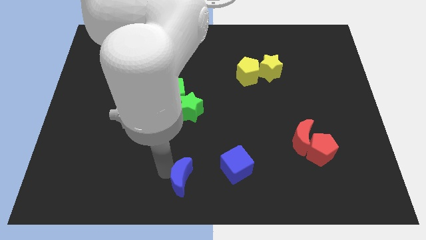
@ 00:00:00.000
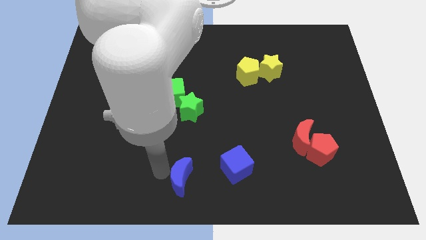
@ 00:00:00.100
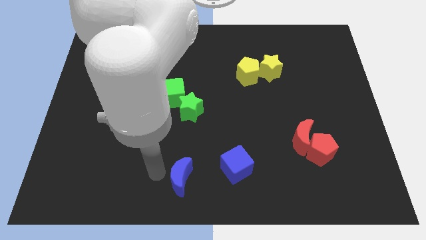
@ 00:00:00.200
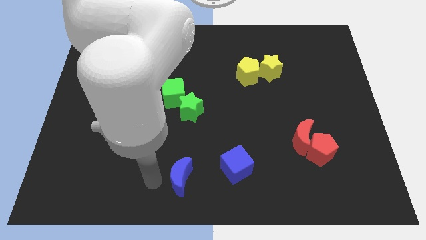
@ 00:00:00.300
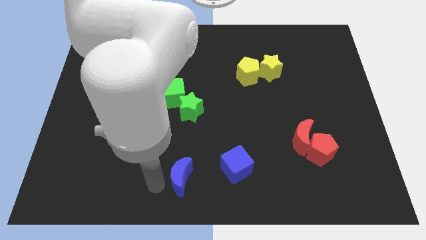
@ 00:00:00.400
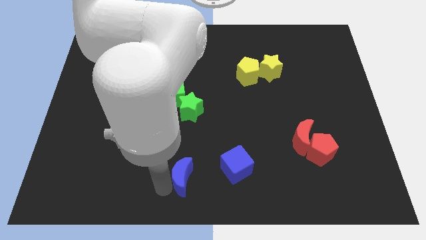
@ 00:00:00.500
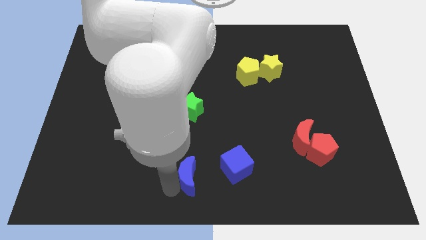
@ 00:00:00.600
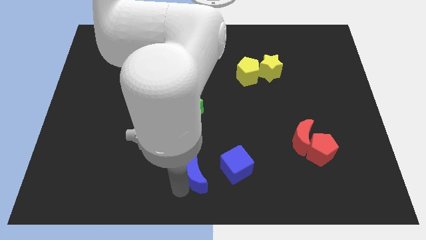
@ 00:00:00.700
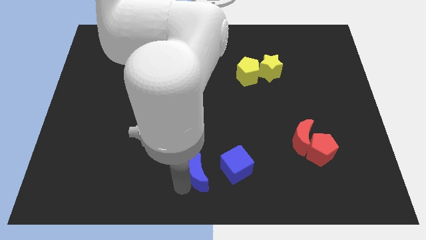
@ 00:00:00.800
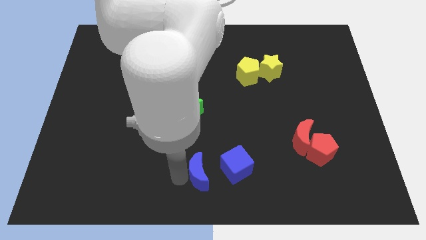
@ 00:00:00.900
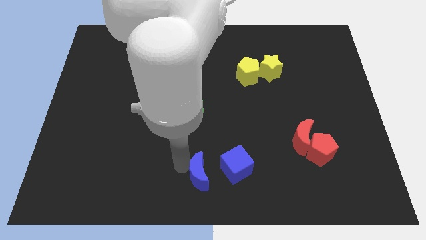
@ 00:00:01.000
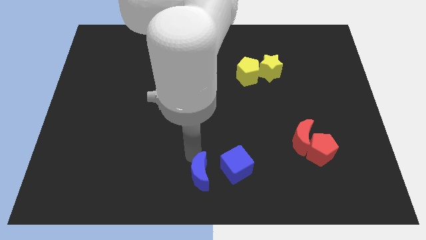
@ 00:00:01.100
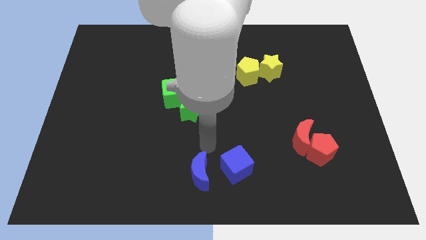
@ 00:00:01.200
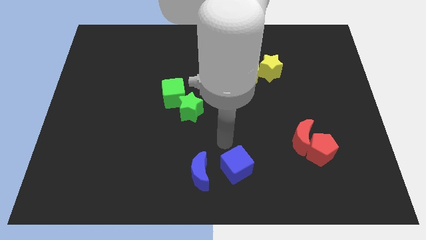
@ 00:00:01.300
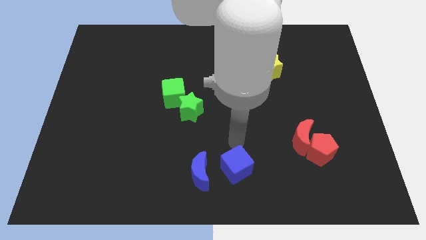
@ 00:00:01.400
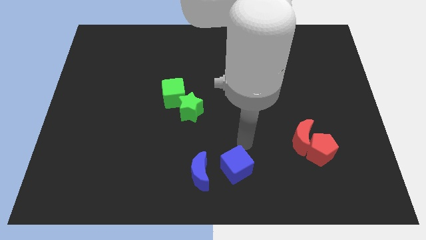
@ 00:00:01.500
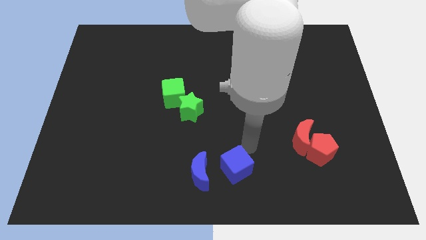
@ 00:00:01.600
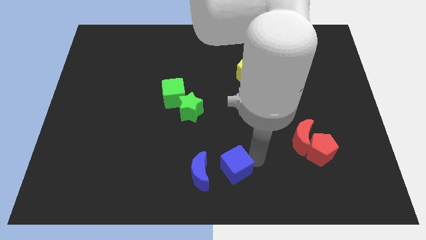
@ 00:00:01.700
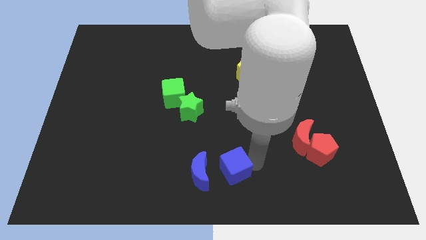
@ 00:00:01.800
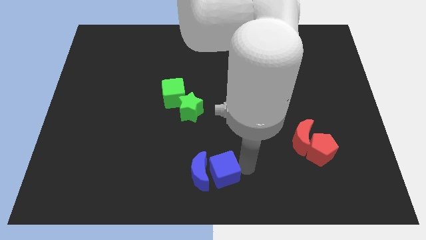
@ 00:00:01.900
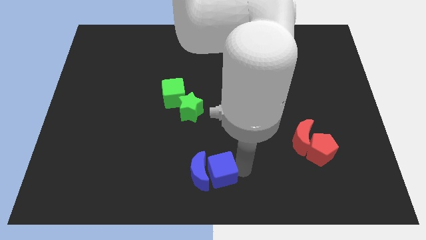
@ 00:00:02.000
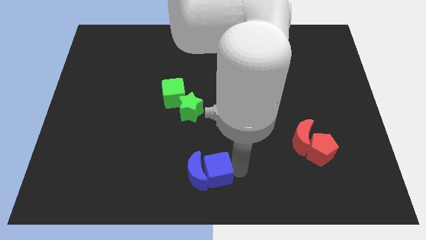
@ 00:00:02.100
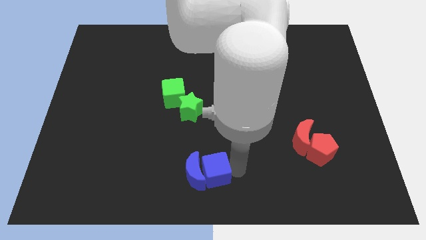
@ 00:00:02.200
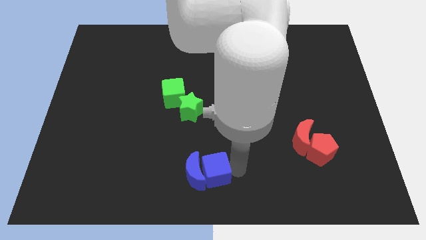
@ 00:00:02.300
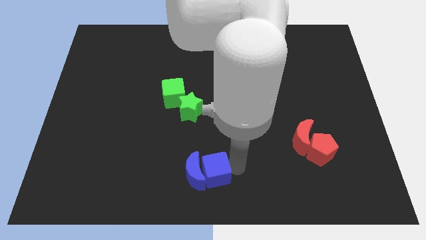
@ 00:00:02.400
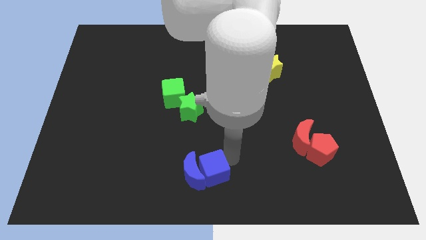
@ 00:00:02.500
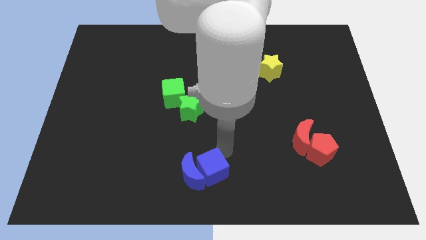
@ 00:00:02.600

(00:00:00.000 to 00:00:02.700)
put blue blocks together

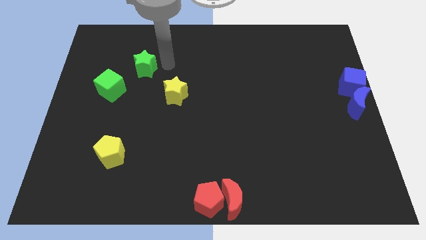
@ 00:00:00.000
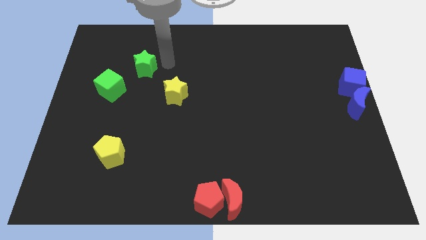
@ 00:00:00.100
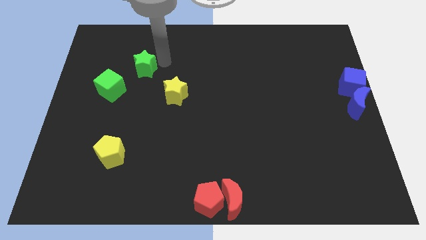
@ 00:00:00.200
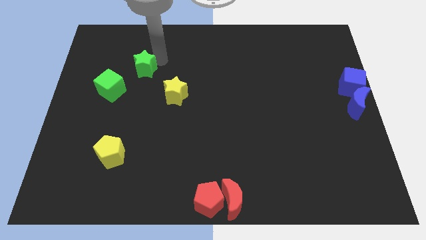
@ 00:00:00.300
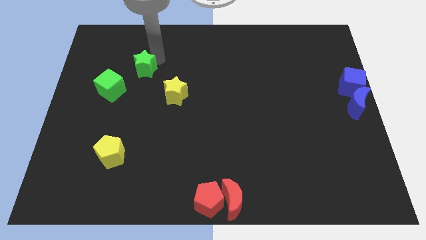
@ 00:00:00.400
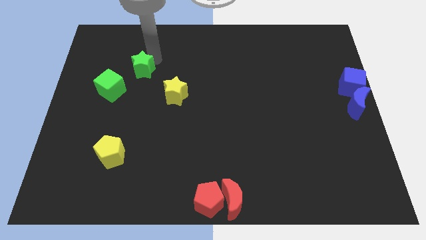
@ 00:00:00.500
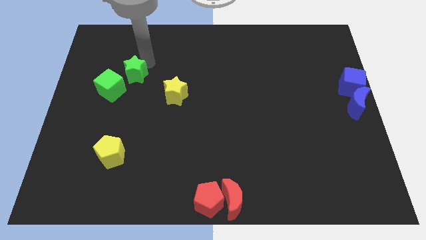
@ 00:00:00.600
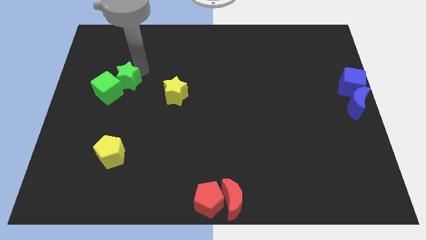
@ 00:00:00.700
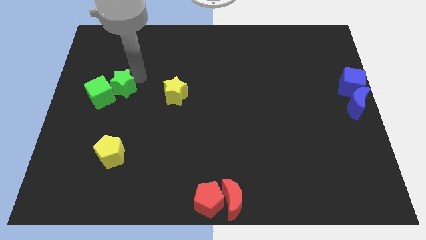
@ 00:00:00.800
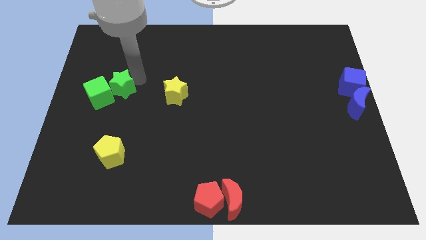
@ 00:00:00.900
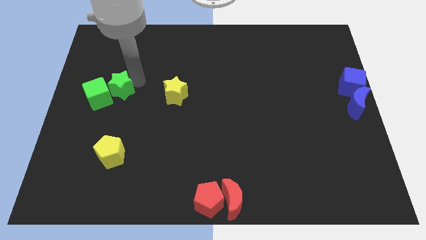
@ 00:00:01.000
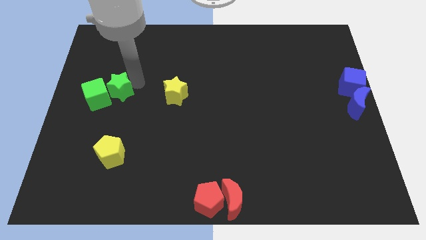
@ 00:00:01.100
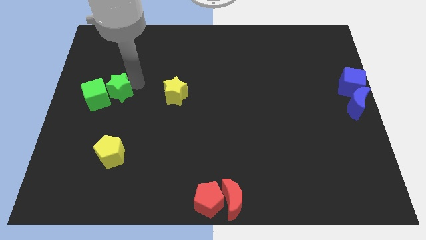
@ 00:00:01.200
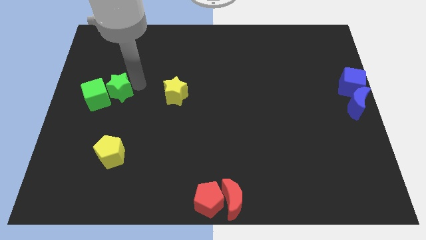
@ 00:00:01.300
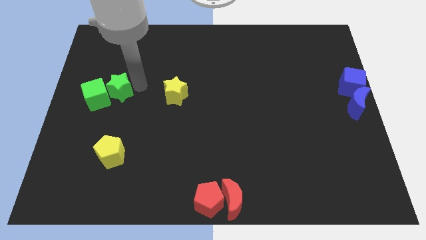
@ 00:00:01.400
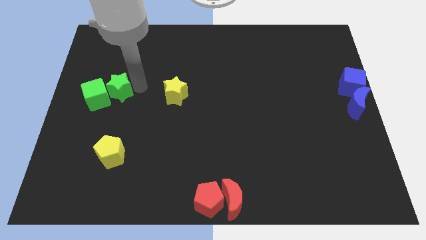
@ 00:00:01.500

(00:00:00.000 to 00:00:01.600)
push the green star into the green cube

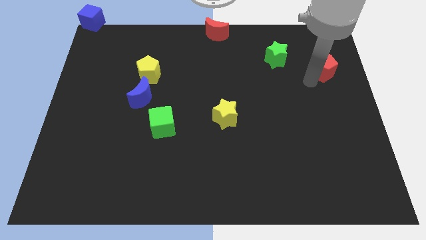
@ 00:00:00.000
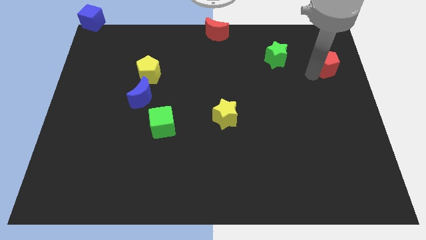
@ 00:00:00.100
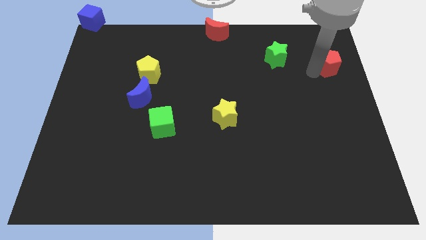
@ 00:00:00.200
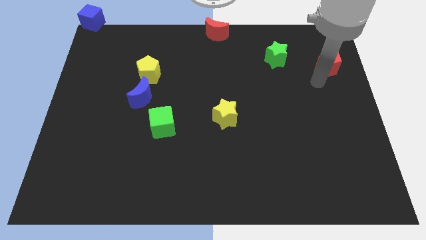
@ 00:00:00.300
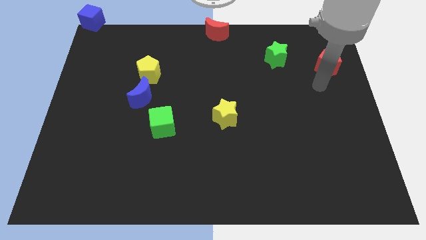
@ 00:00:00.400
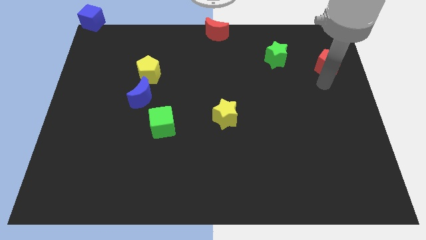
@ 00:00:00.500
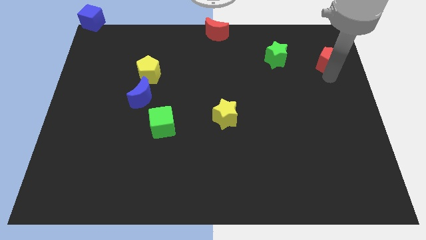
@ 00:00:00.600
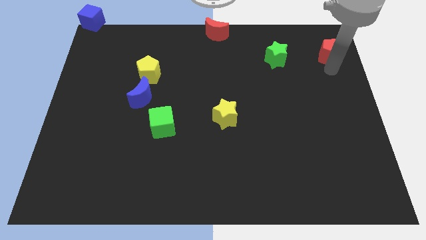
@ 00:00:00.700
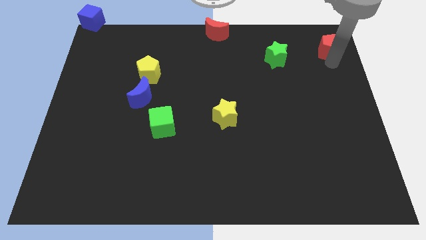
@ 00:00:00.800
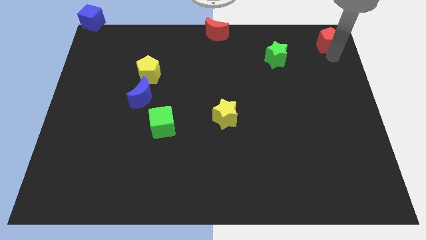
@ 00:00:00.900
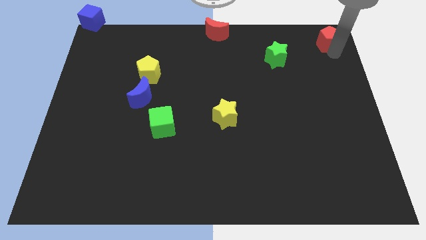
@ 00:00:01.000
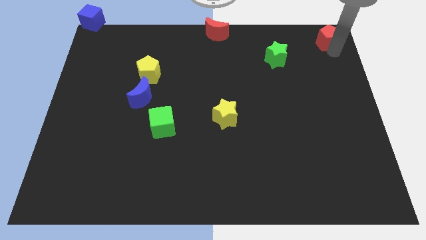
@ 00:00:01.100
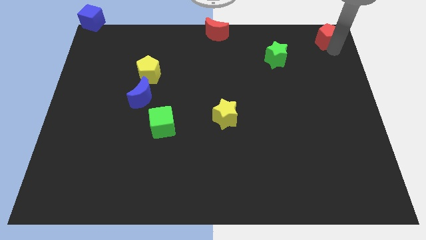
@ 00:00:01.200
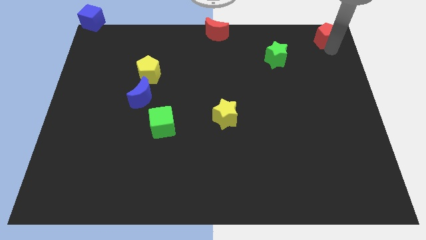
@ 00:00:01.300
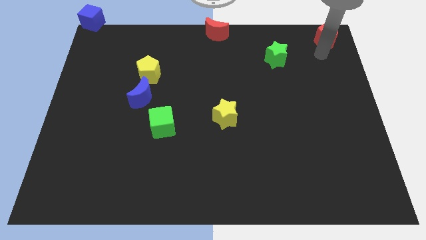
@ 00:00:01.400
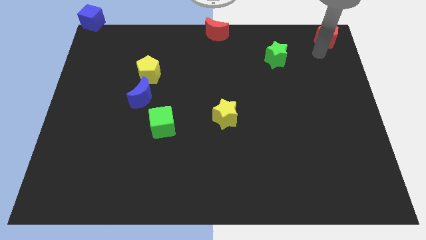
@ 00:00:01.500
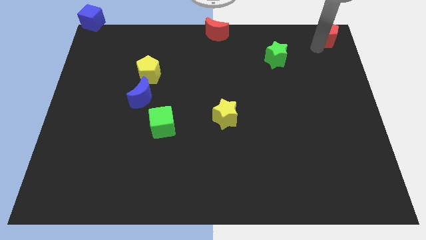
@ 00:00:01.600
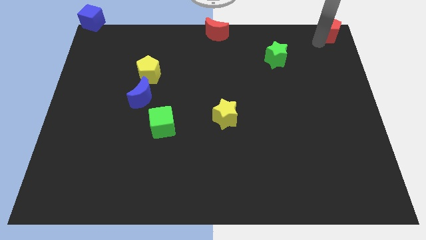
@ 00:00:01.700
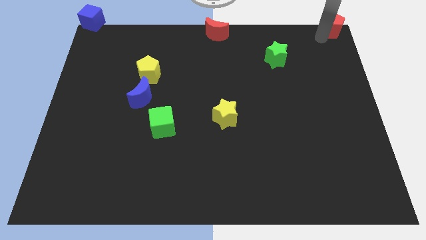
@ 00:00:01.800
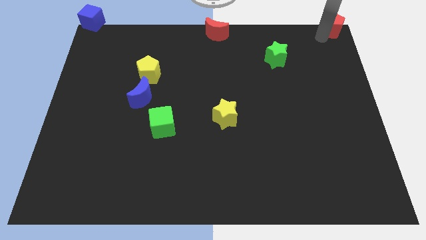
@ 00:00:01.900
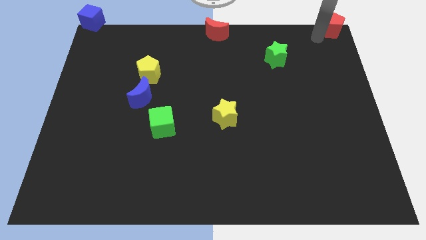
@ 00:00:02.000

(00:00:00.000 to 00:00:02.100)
place red pentagon to top right corner of the board

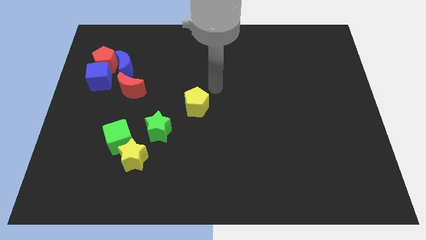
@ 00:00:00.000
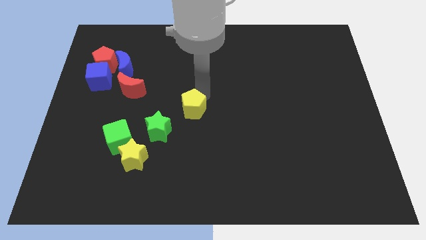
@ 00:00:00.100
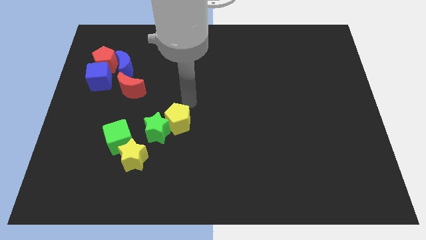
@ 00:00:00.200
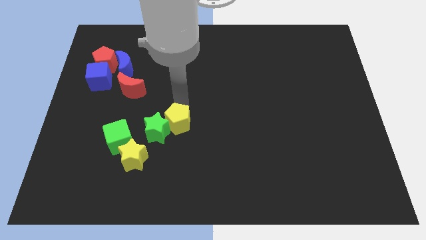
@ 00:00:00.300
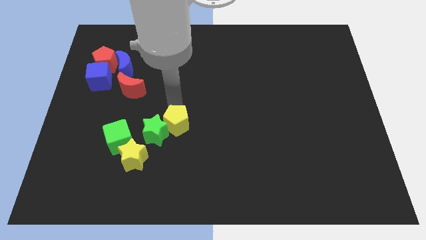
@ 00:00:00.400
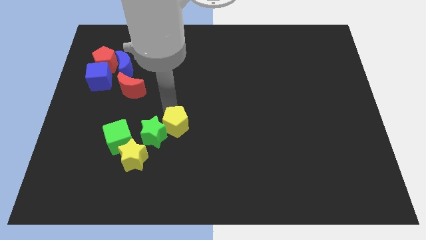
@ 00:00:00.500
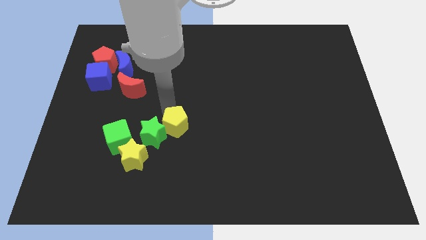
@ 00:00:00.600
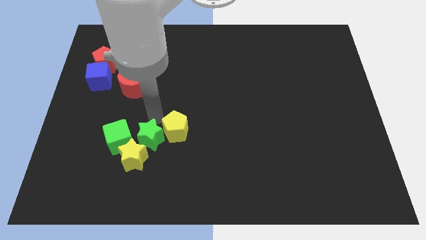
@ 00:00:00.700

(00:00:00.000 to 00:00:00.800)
place yellow pentagon beside green star

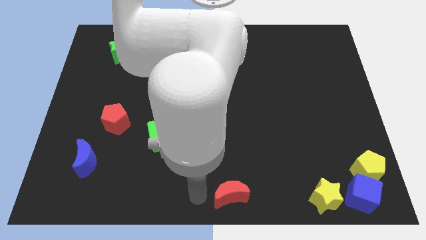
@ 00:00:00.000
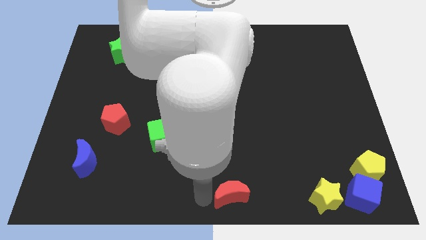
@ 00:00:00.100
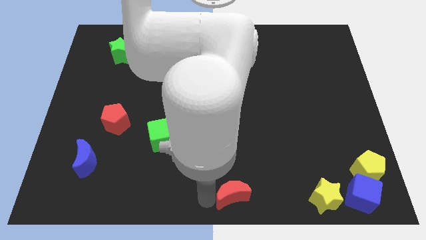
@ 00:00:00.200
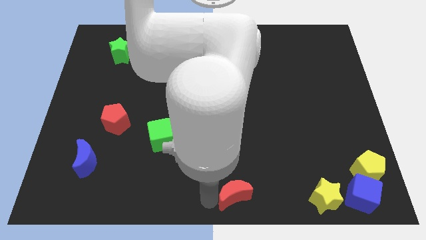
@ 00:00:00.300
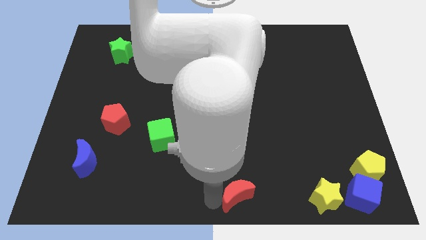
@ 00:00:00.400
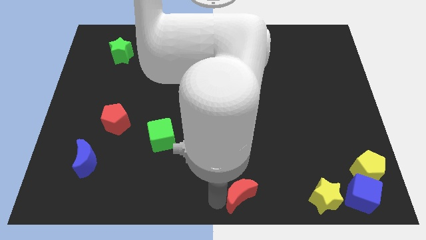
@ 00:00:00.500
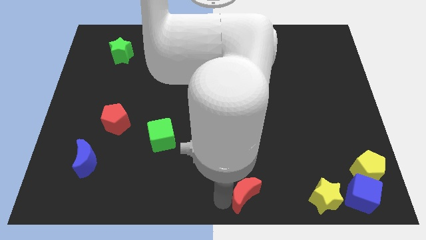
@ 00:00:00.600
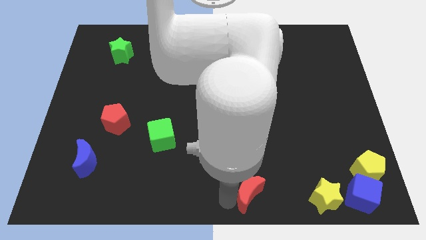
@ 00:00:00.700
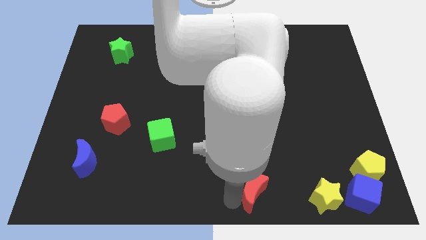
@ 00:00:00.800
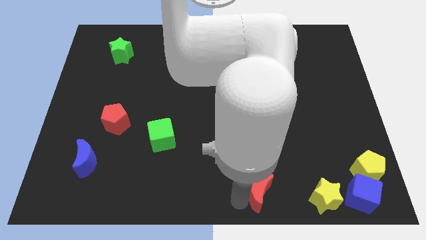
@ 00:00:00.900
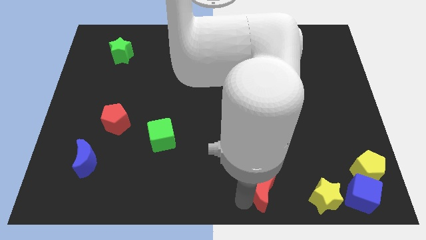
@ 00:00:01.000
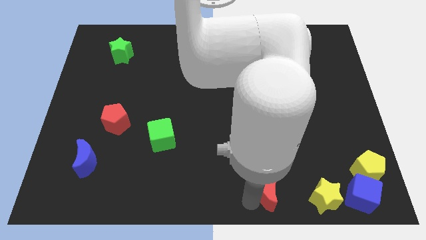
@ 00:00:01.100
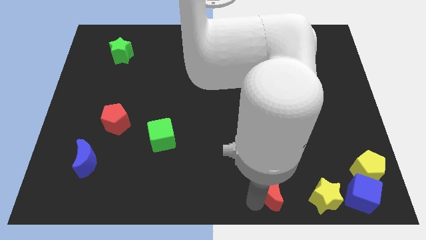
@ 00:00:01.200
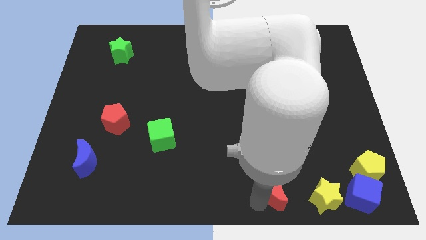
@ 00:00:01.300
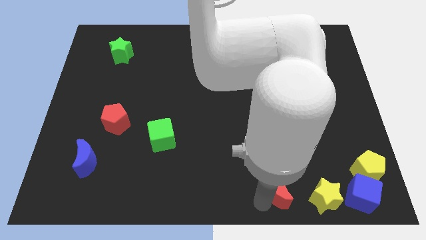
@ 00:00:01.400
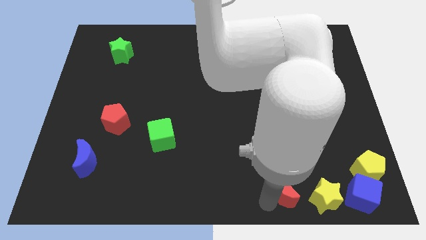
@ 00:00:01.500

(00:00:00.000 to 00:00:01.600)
push red moon towards yellow star

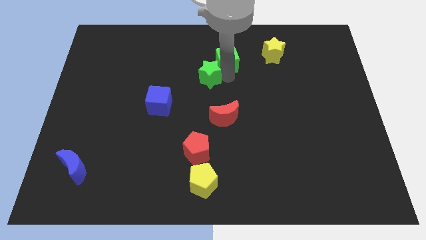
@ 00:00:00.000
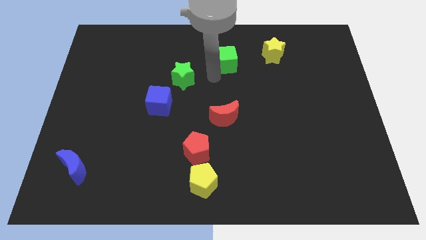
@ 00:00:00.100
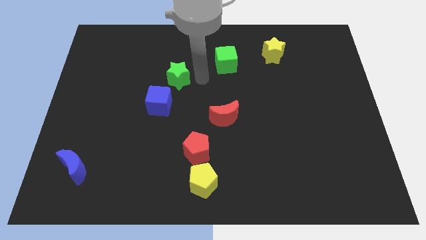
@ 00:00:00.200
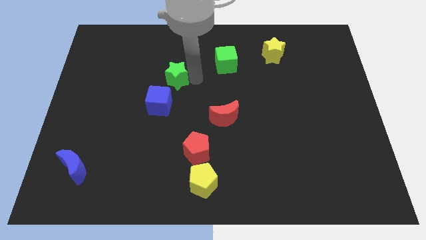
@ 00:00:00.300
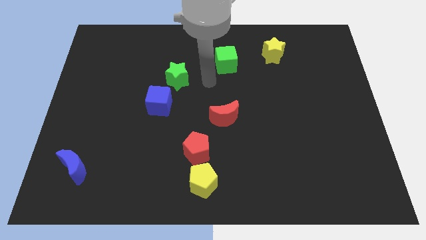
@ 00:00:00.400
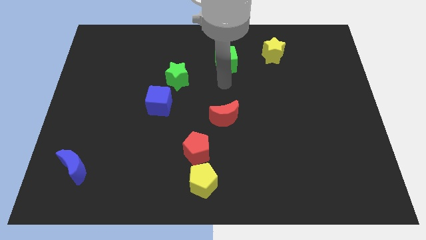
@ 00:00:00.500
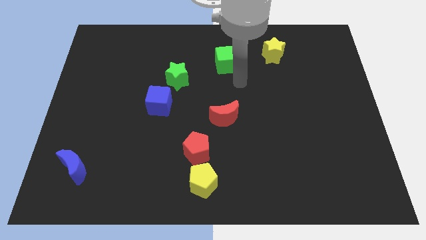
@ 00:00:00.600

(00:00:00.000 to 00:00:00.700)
separate the green star from the green cube
